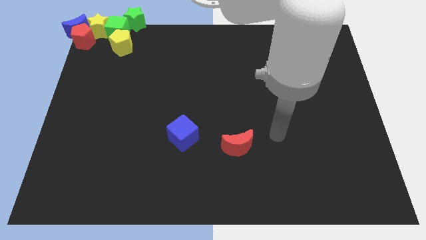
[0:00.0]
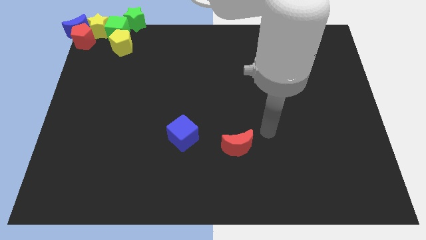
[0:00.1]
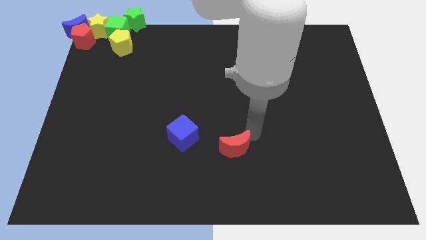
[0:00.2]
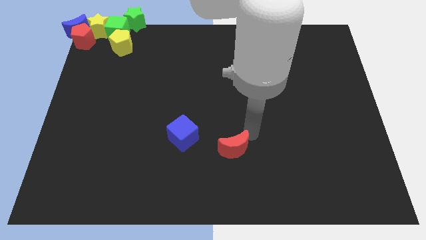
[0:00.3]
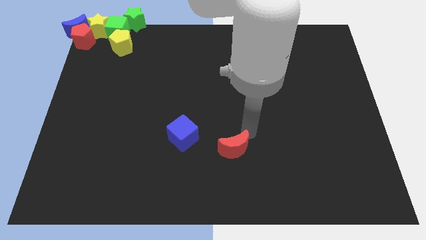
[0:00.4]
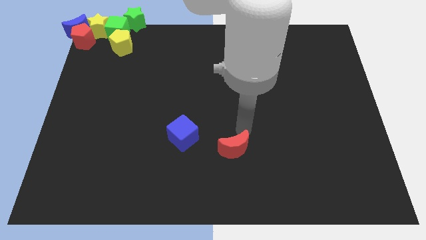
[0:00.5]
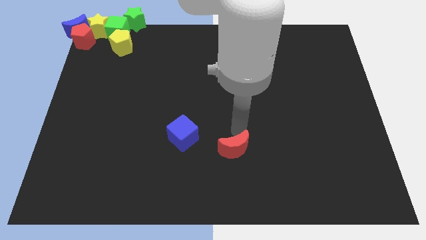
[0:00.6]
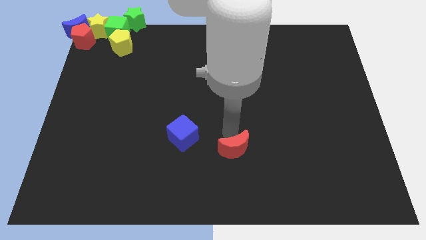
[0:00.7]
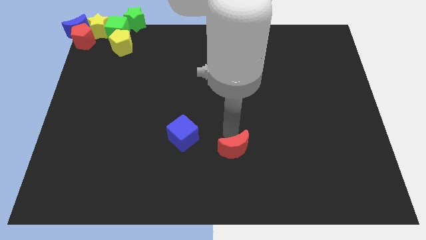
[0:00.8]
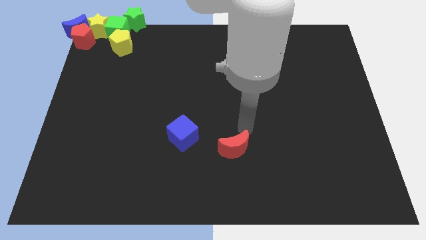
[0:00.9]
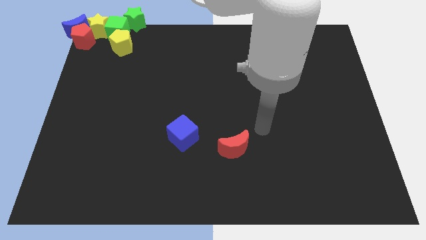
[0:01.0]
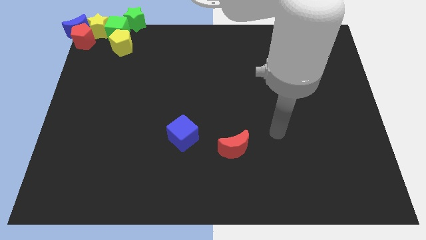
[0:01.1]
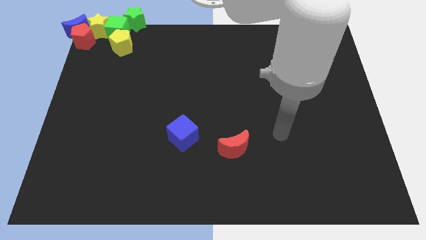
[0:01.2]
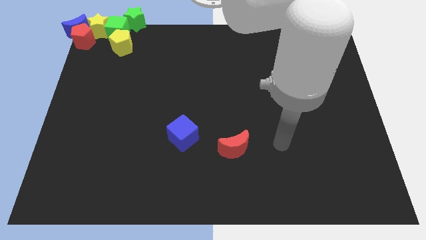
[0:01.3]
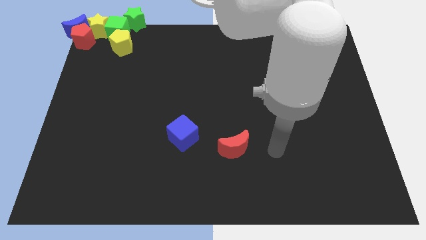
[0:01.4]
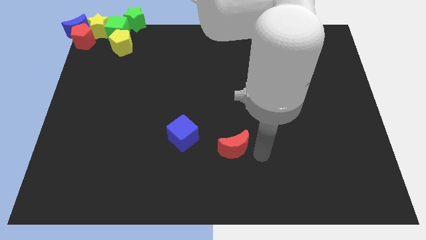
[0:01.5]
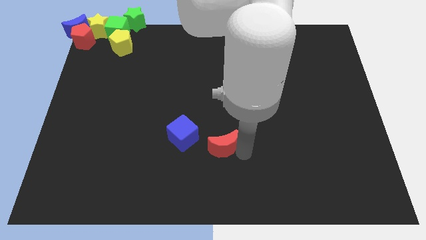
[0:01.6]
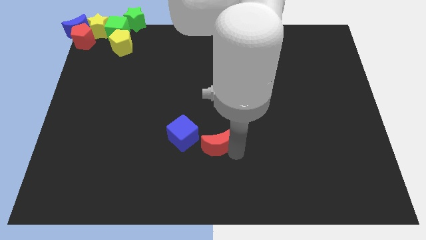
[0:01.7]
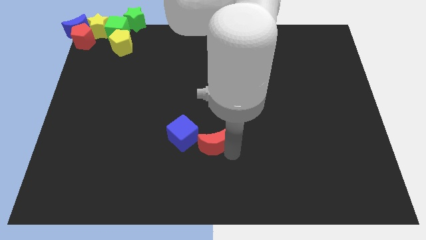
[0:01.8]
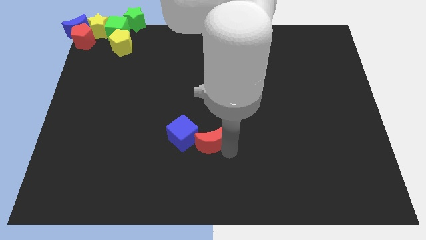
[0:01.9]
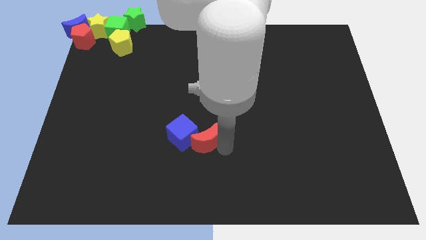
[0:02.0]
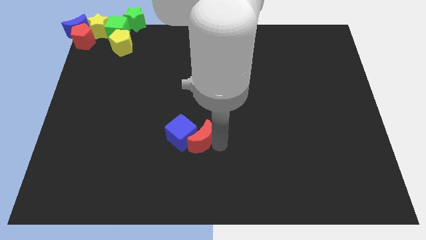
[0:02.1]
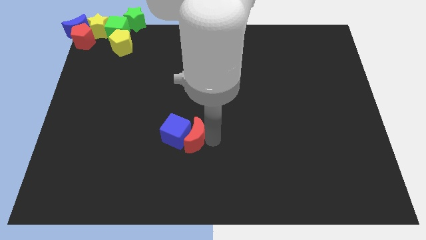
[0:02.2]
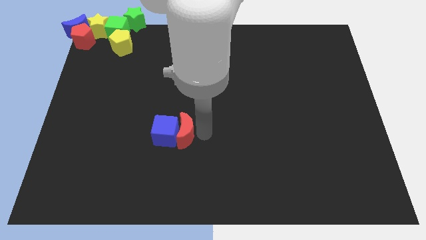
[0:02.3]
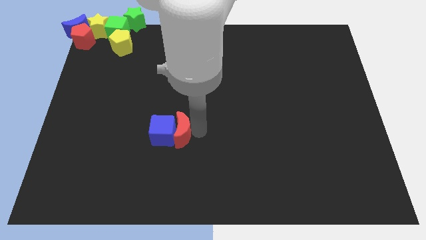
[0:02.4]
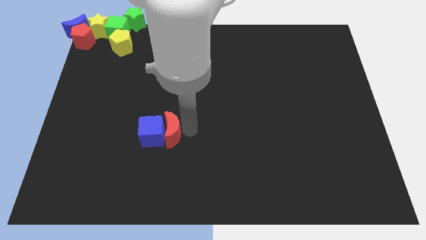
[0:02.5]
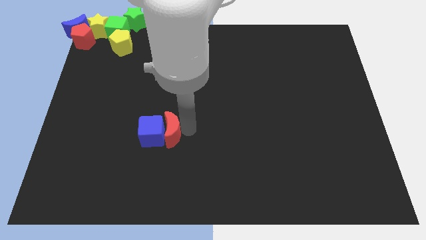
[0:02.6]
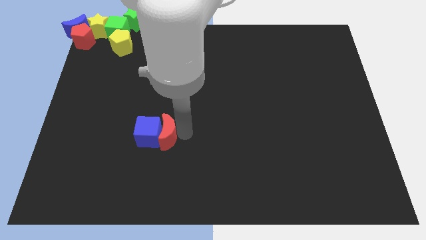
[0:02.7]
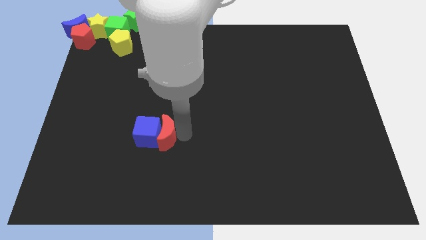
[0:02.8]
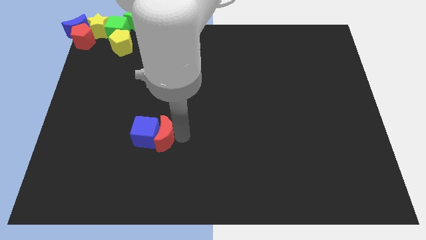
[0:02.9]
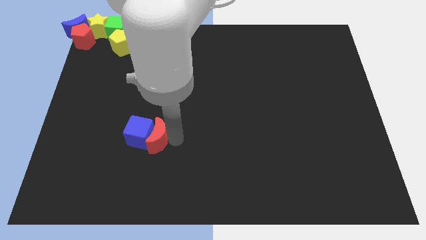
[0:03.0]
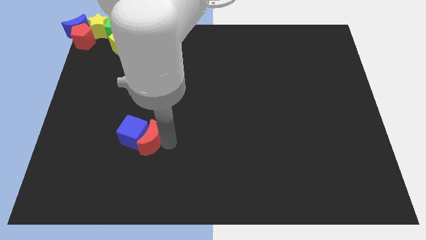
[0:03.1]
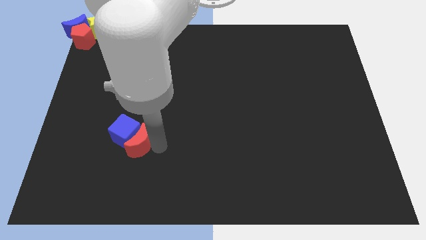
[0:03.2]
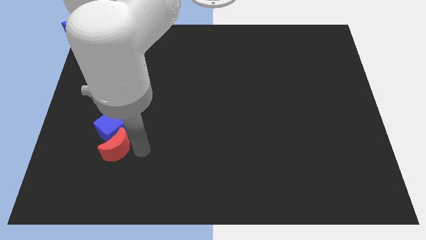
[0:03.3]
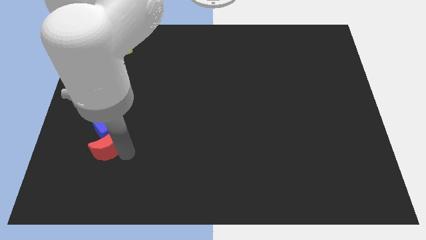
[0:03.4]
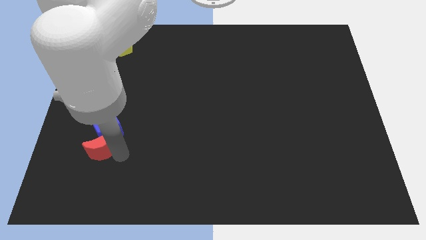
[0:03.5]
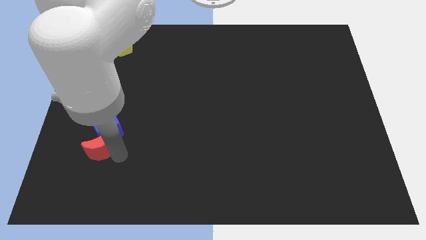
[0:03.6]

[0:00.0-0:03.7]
push the blue cube and red moon towards the left side of the board

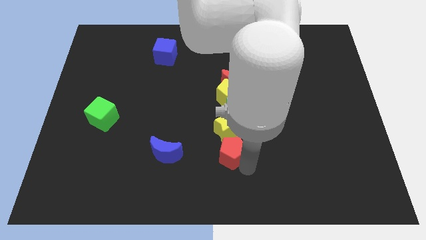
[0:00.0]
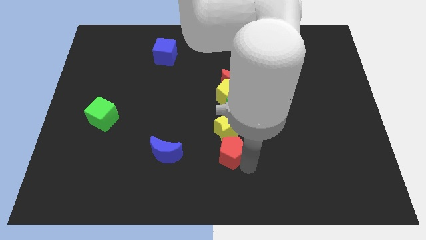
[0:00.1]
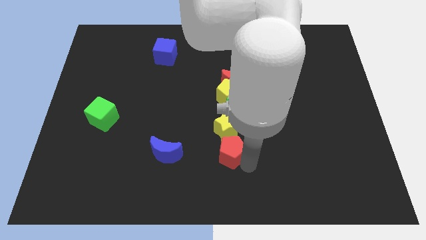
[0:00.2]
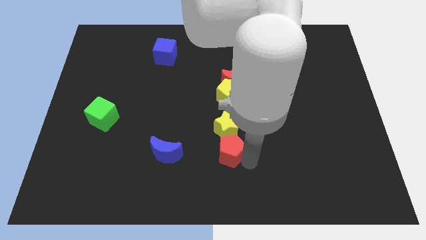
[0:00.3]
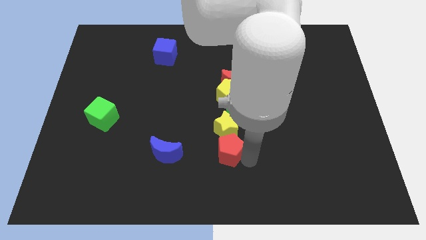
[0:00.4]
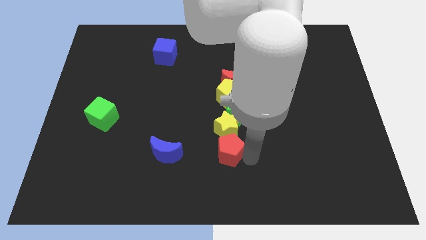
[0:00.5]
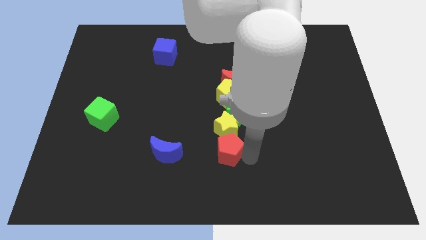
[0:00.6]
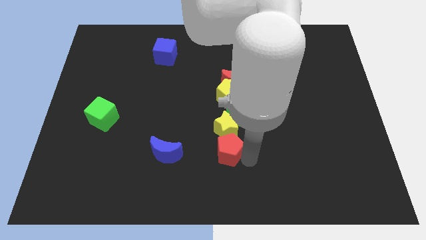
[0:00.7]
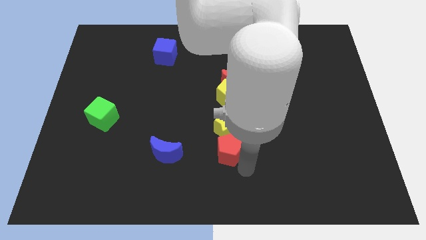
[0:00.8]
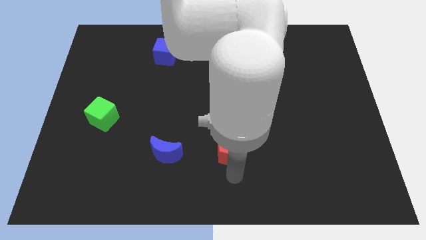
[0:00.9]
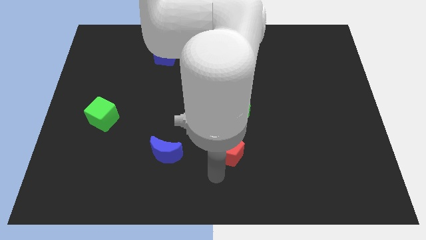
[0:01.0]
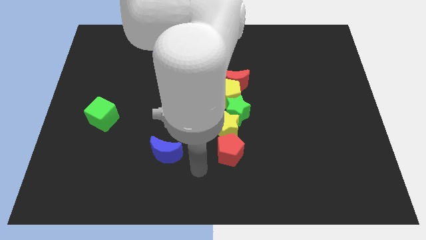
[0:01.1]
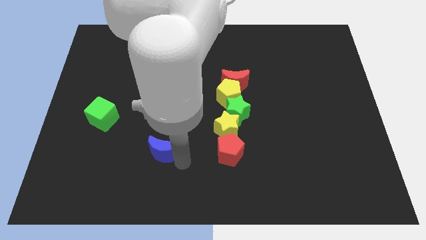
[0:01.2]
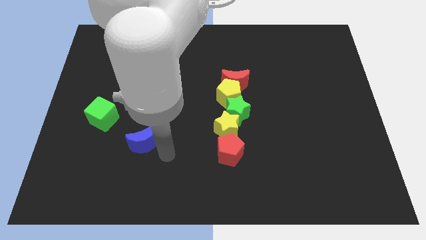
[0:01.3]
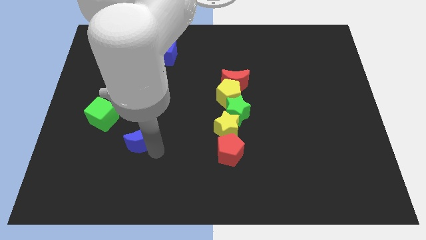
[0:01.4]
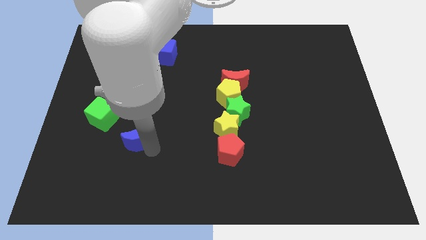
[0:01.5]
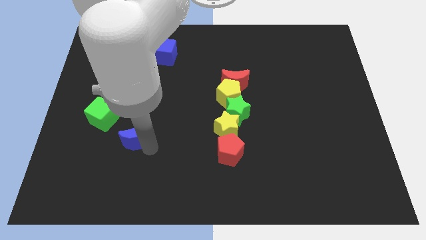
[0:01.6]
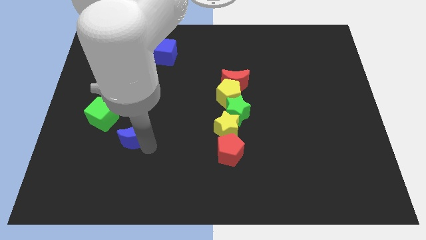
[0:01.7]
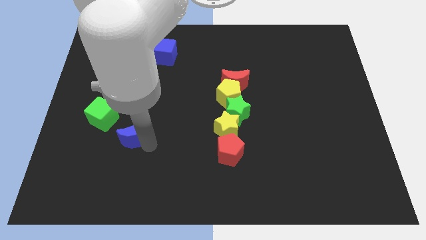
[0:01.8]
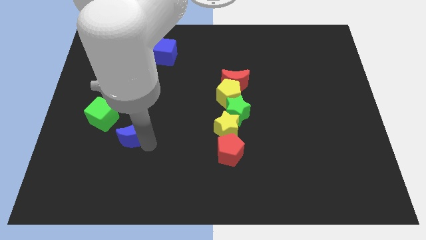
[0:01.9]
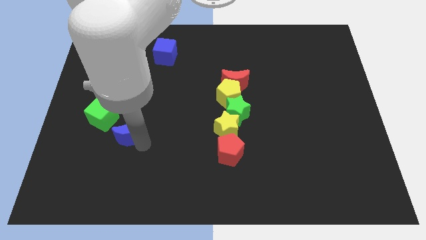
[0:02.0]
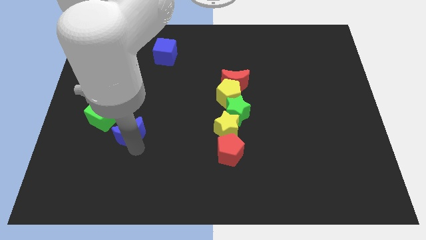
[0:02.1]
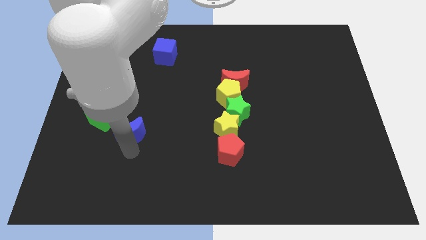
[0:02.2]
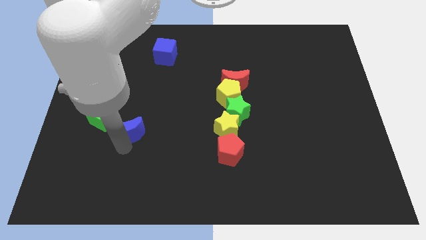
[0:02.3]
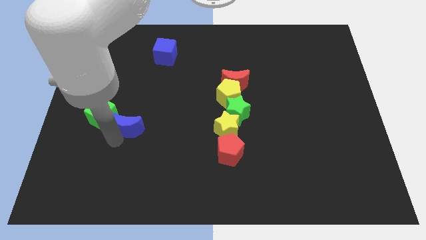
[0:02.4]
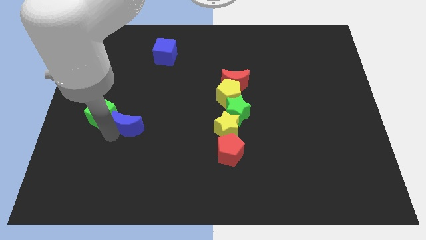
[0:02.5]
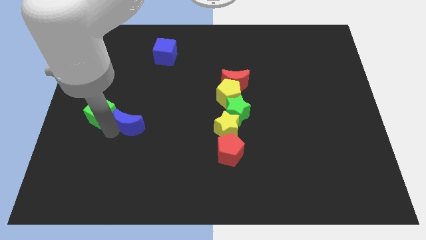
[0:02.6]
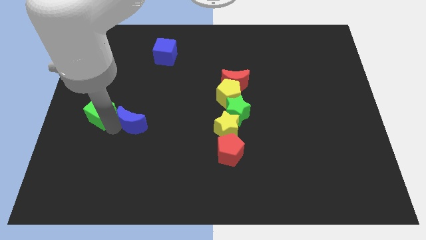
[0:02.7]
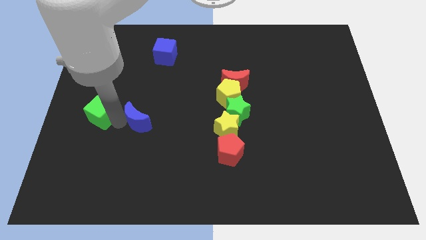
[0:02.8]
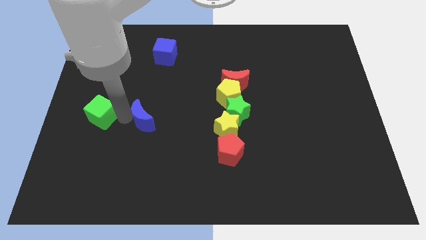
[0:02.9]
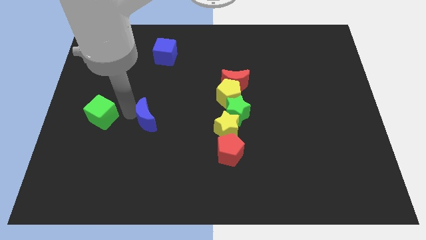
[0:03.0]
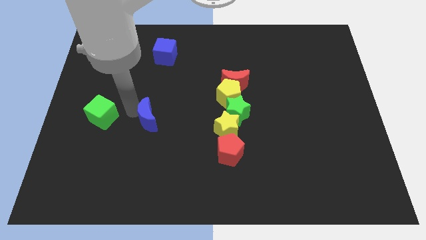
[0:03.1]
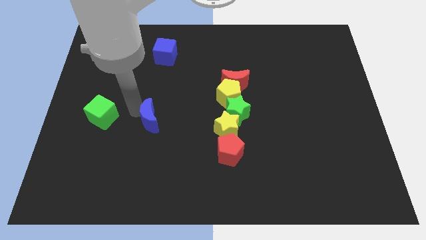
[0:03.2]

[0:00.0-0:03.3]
put the blue crescent vertically below the blue cube

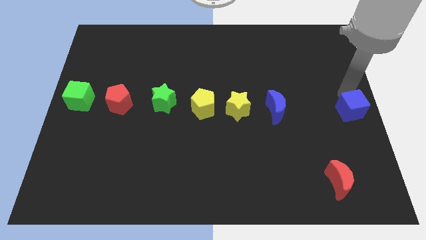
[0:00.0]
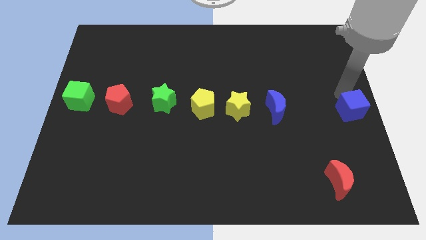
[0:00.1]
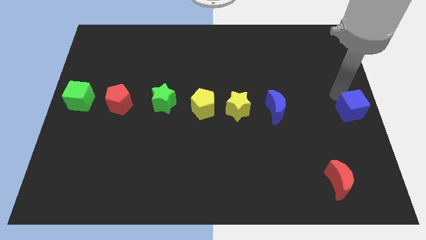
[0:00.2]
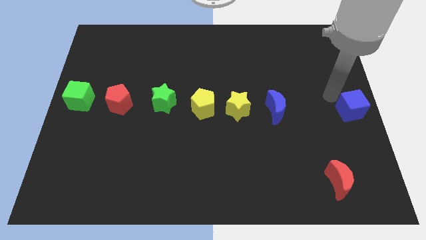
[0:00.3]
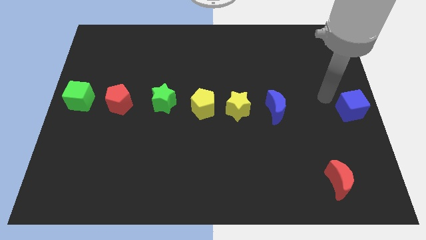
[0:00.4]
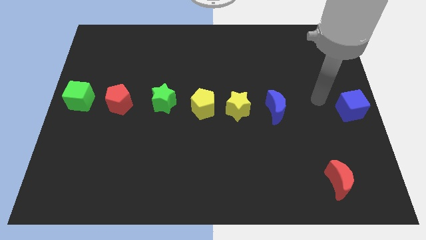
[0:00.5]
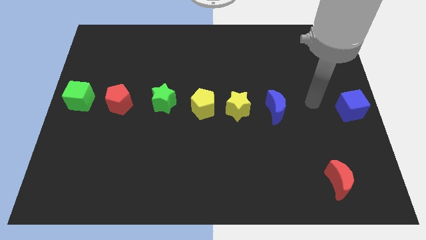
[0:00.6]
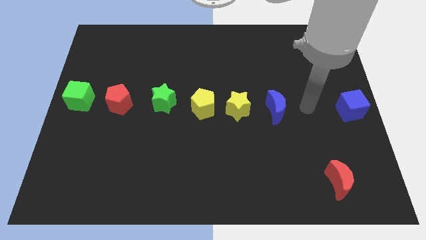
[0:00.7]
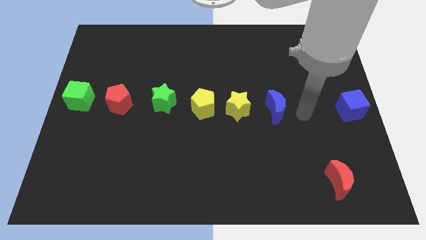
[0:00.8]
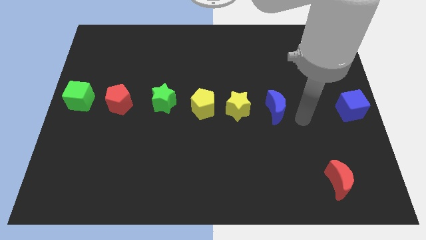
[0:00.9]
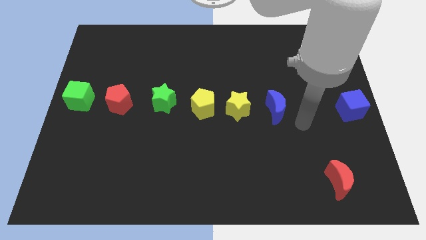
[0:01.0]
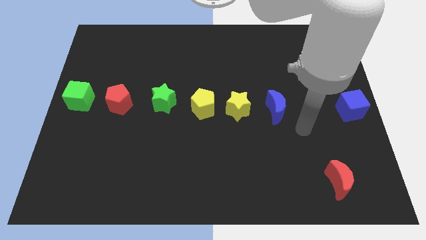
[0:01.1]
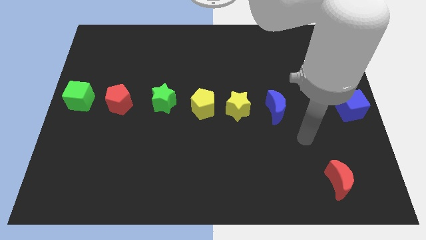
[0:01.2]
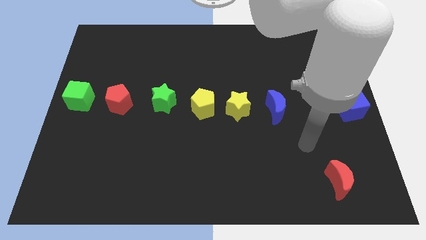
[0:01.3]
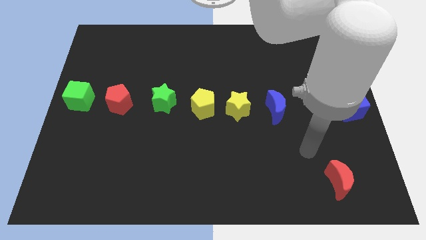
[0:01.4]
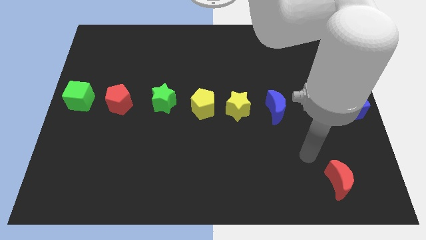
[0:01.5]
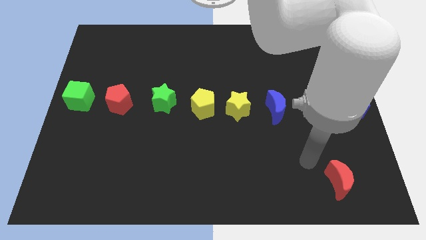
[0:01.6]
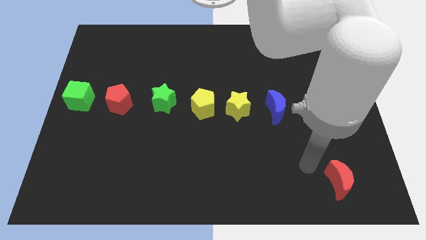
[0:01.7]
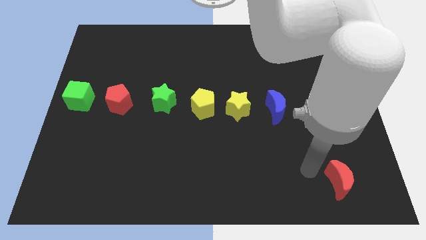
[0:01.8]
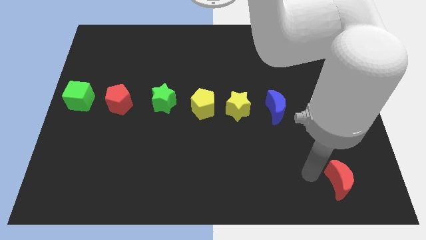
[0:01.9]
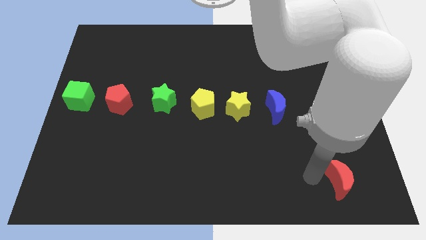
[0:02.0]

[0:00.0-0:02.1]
move your arm left side of the red moon
